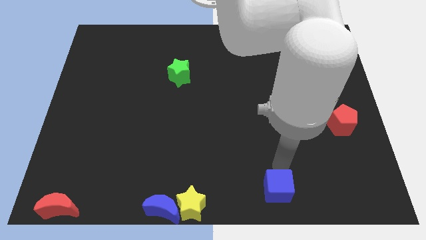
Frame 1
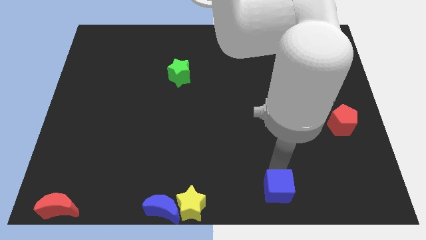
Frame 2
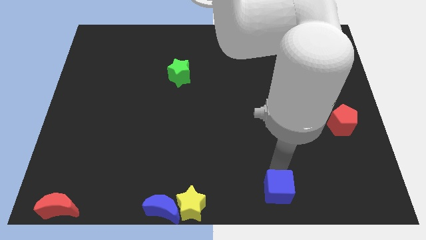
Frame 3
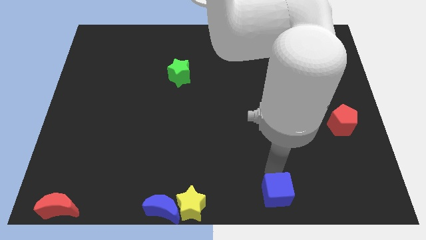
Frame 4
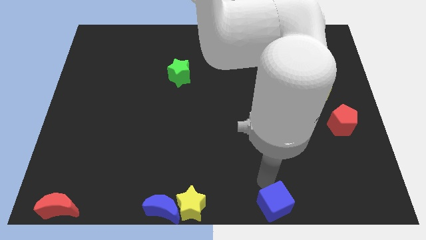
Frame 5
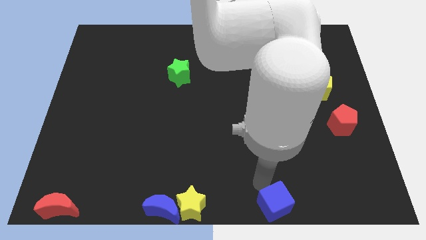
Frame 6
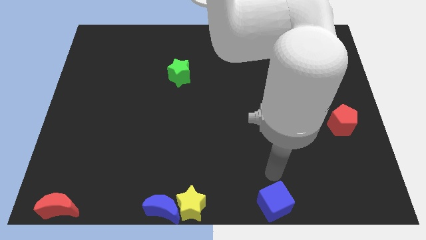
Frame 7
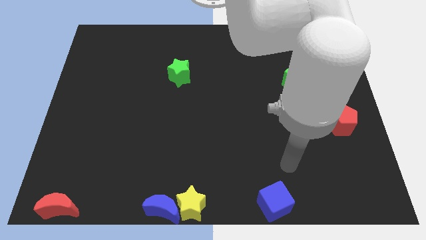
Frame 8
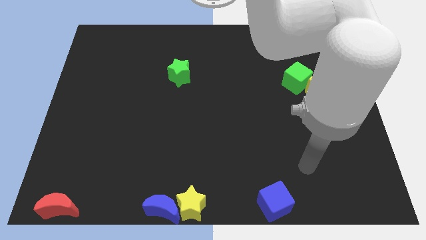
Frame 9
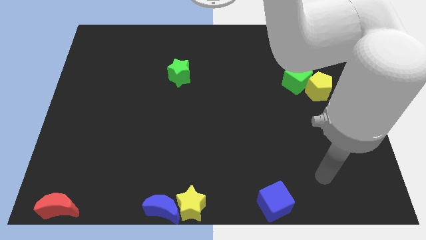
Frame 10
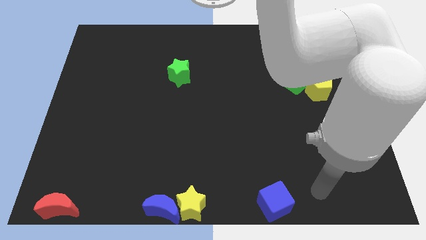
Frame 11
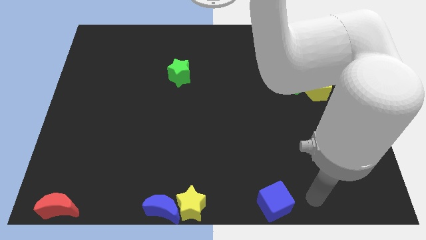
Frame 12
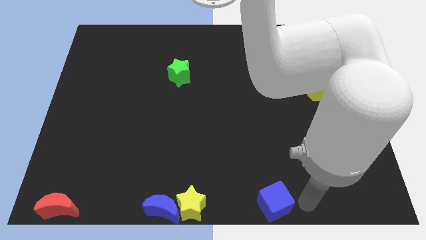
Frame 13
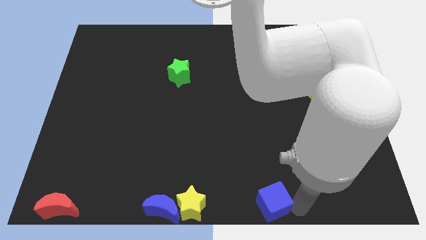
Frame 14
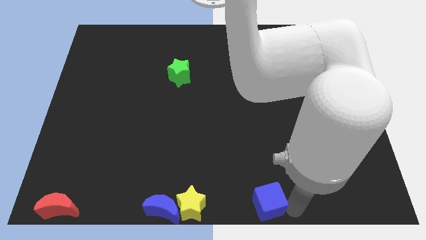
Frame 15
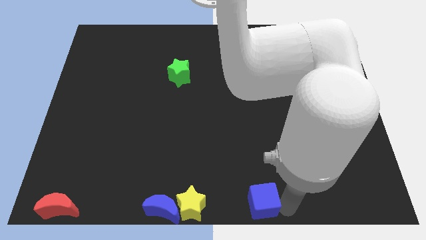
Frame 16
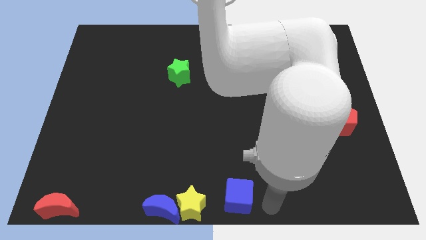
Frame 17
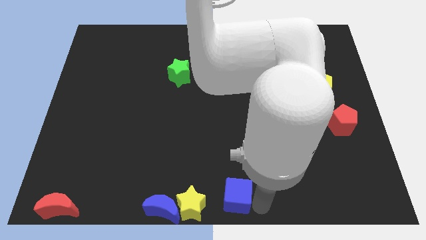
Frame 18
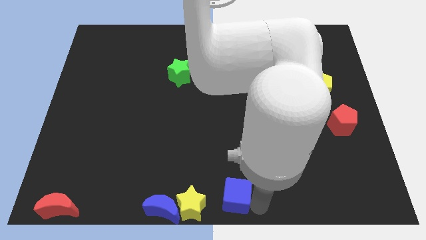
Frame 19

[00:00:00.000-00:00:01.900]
drag the blue cube towards the yellow star

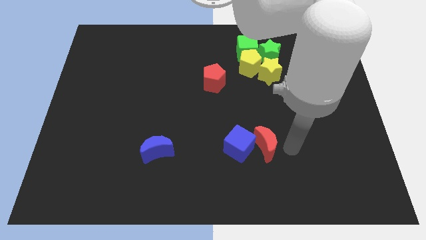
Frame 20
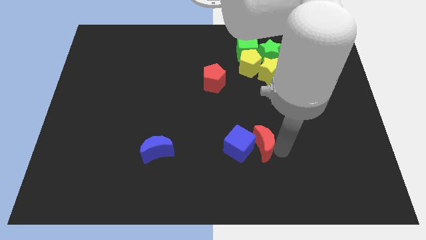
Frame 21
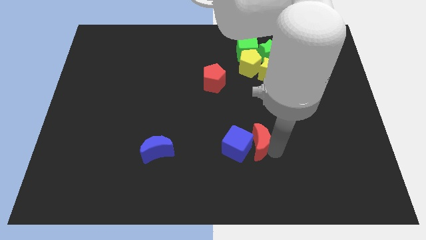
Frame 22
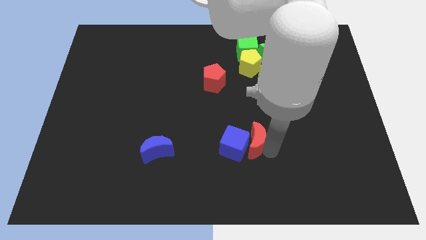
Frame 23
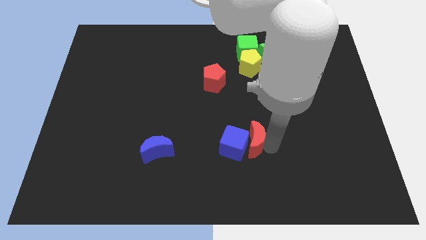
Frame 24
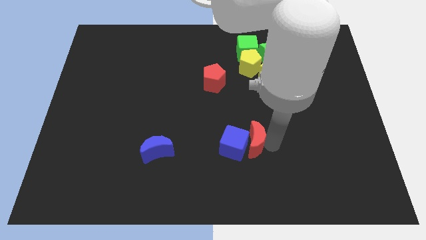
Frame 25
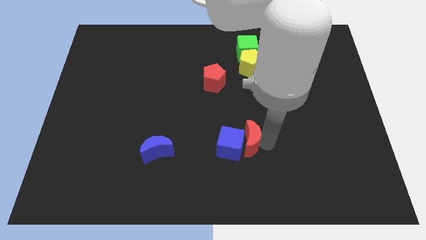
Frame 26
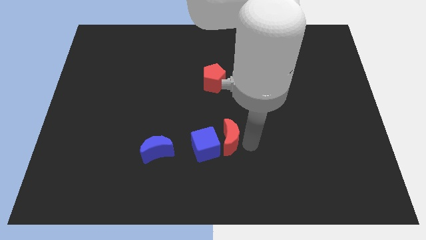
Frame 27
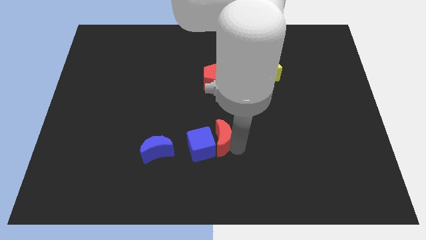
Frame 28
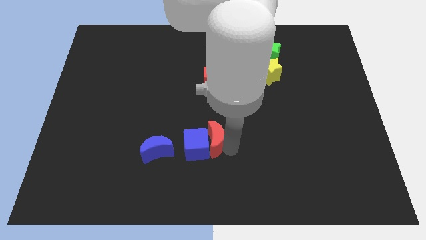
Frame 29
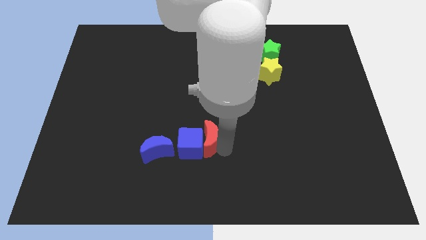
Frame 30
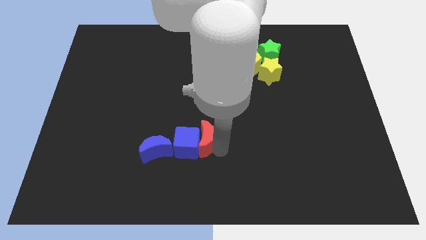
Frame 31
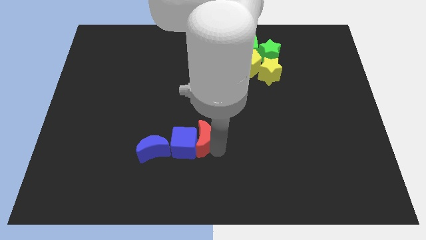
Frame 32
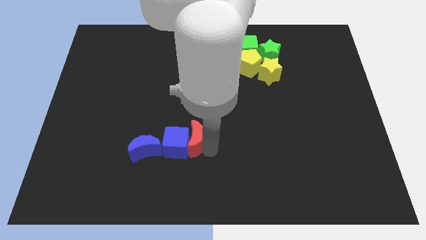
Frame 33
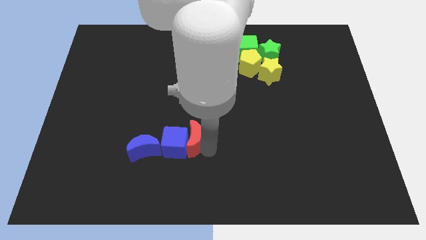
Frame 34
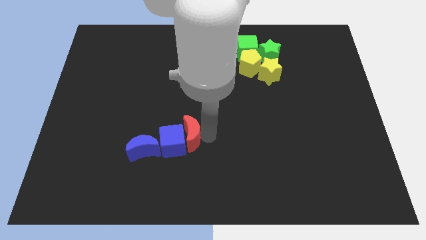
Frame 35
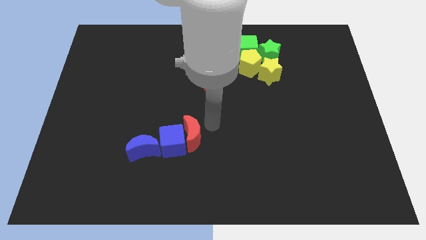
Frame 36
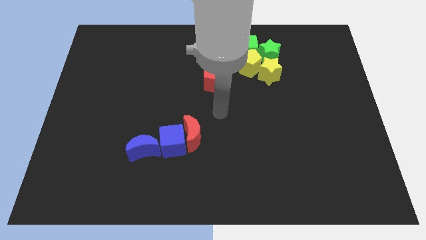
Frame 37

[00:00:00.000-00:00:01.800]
push the red moon with blue cube into blue moon to the right

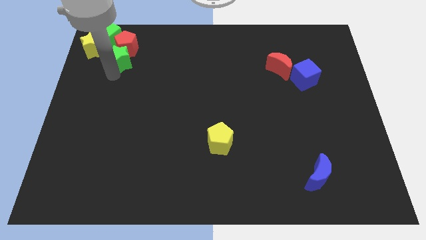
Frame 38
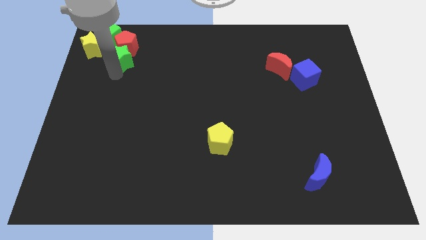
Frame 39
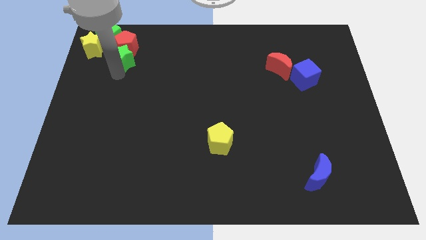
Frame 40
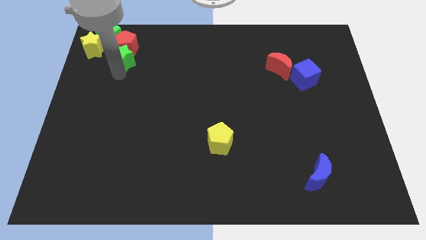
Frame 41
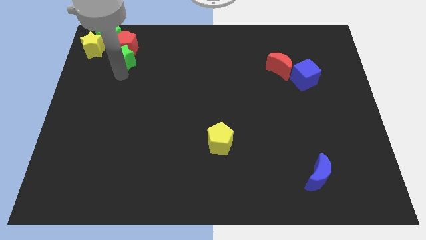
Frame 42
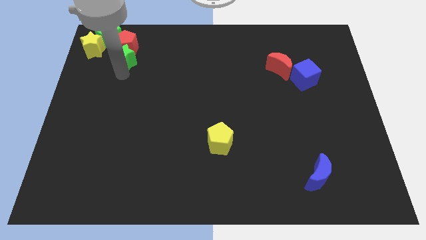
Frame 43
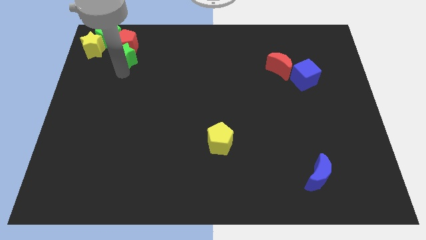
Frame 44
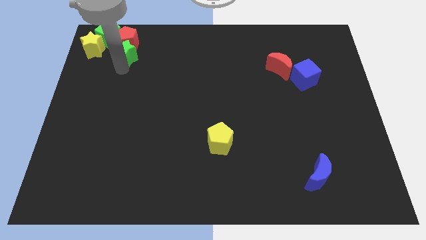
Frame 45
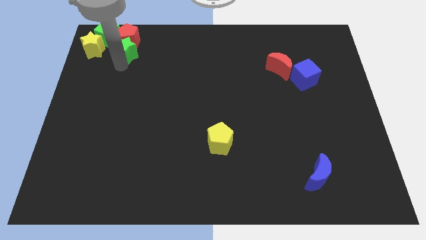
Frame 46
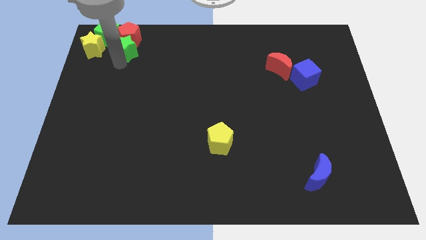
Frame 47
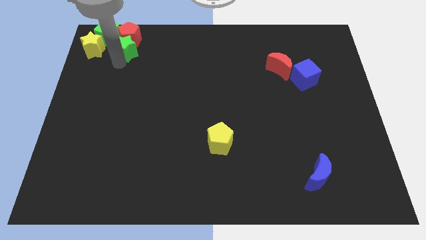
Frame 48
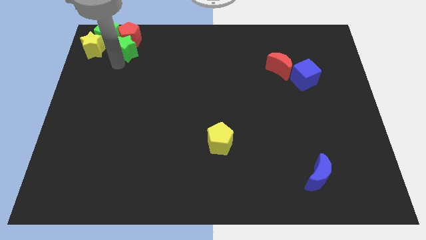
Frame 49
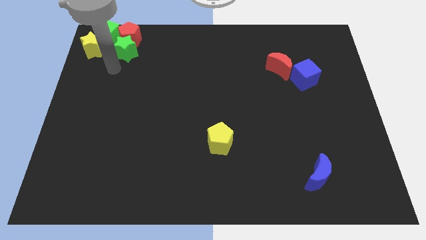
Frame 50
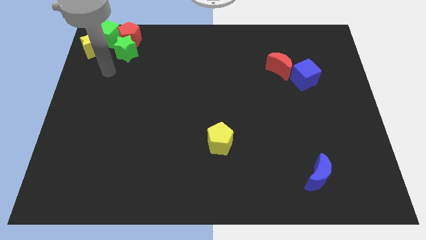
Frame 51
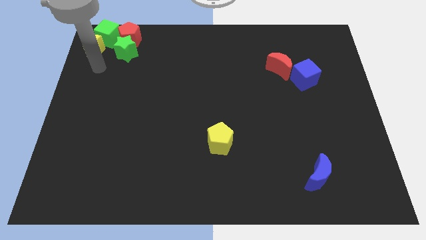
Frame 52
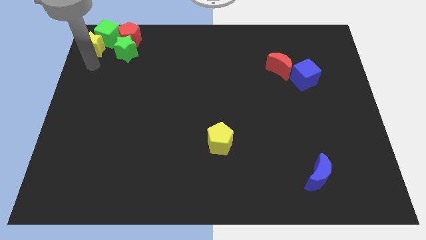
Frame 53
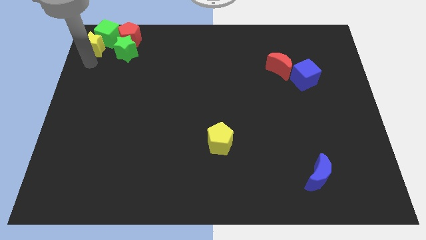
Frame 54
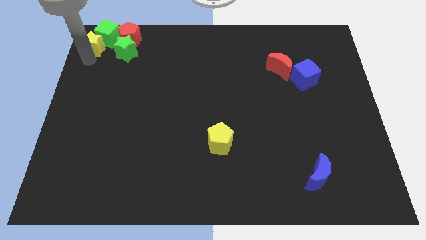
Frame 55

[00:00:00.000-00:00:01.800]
move slightly green star along with red pentagon

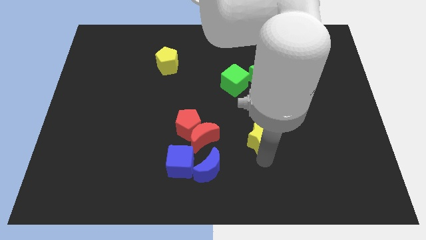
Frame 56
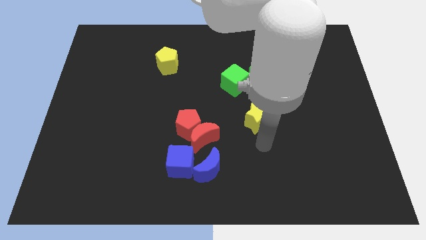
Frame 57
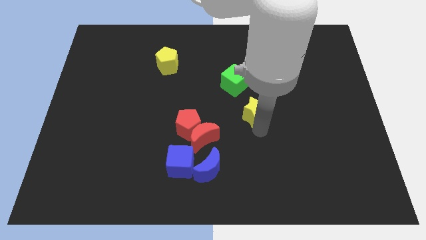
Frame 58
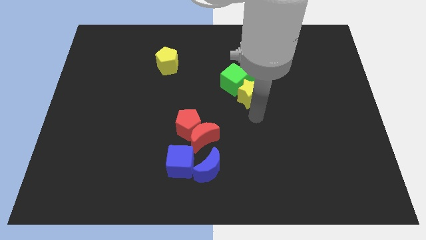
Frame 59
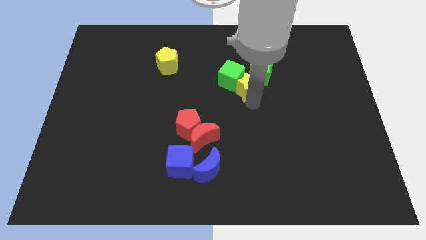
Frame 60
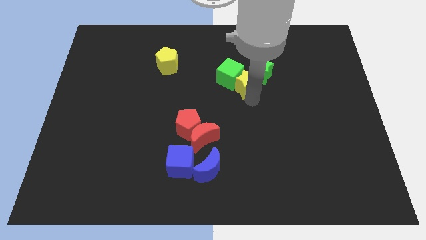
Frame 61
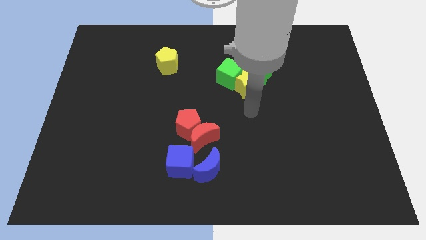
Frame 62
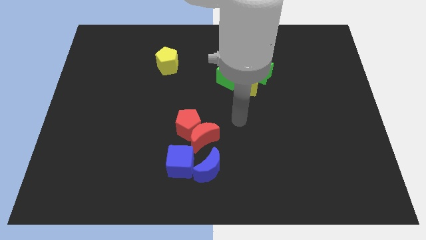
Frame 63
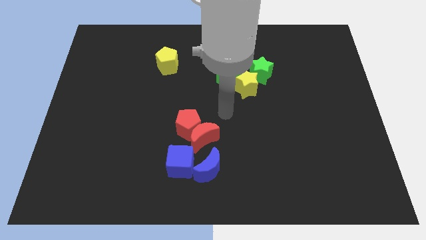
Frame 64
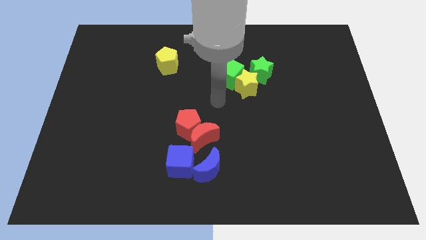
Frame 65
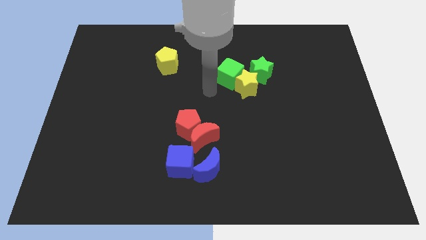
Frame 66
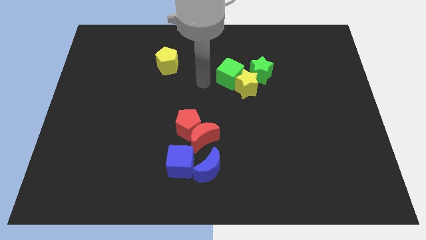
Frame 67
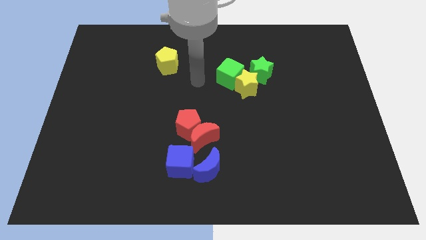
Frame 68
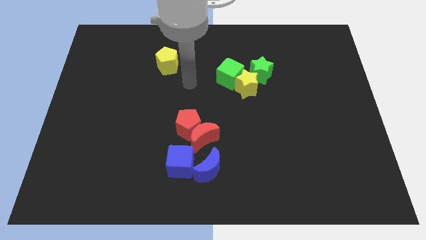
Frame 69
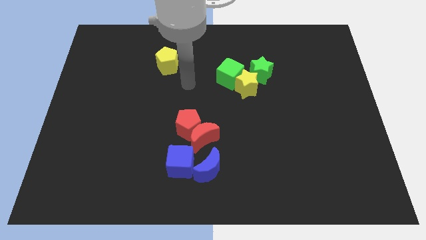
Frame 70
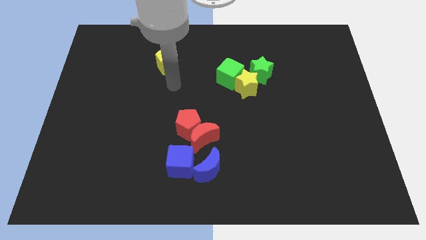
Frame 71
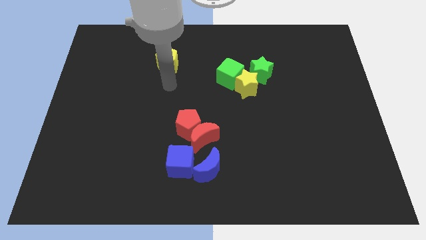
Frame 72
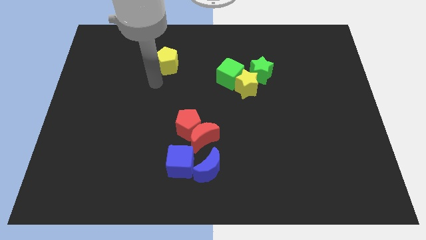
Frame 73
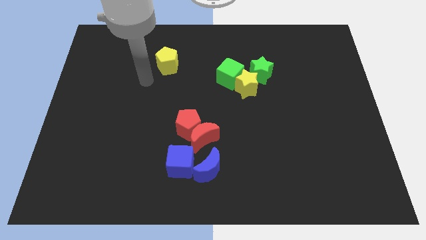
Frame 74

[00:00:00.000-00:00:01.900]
place the yellow star diagonally top right to the red moon

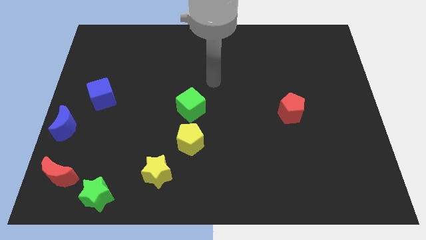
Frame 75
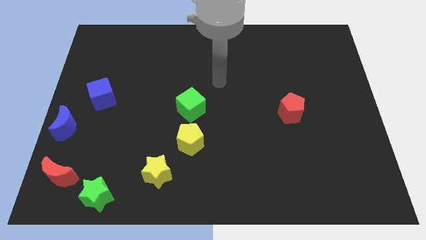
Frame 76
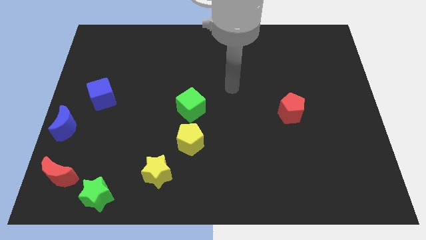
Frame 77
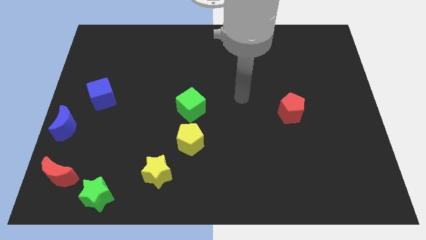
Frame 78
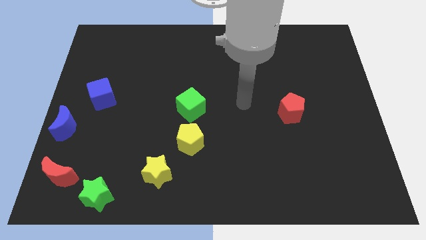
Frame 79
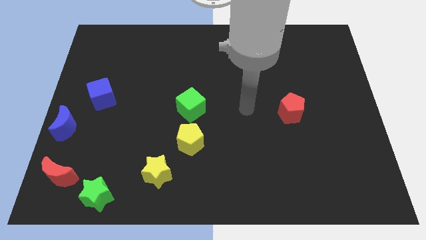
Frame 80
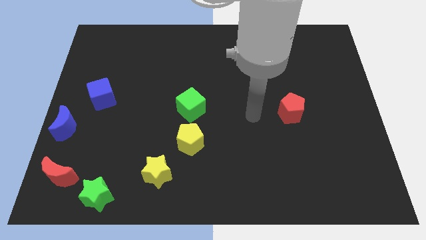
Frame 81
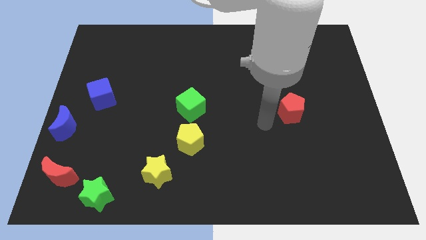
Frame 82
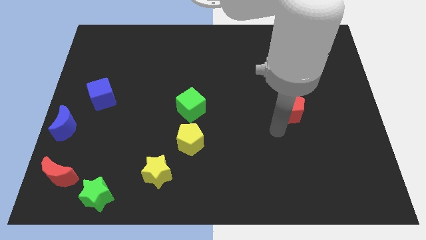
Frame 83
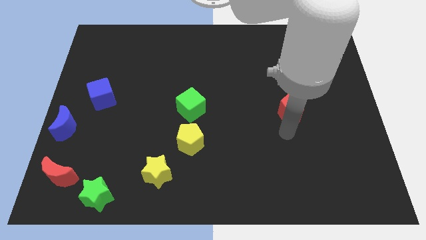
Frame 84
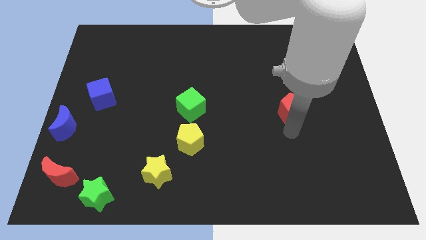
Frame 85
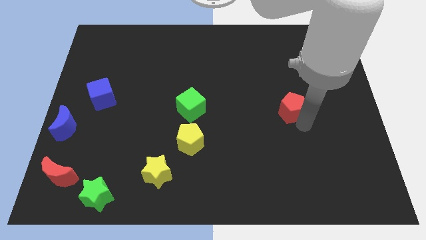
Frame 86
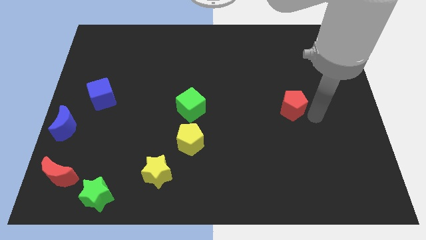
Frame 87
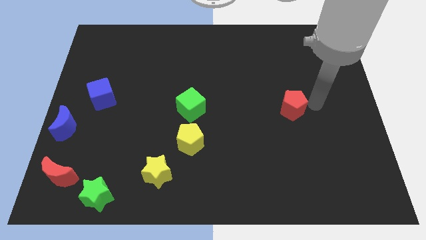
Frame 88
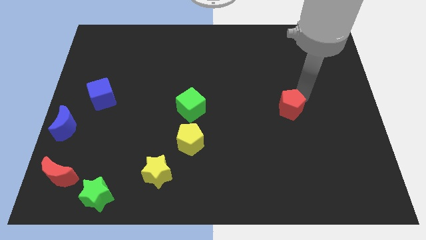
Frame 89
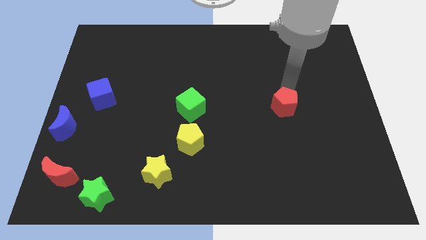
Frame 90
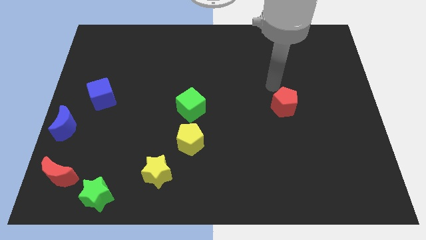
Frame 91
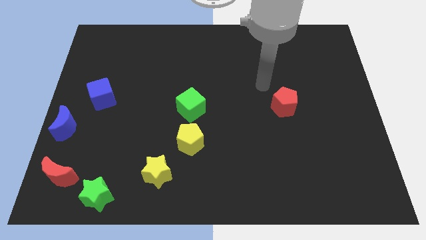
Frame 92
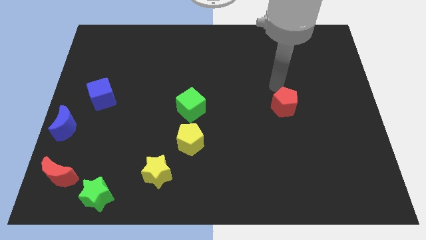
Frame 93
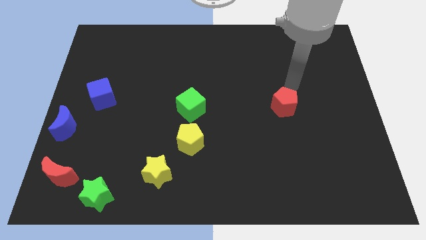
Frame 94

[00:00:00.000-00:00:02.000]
move the red pentagon slightly to the up
